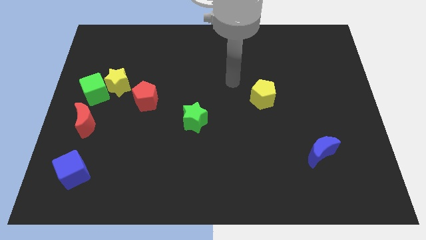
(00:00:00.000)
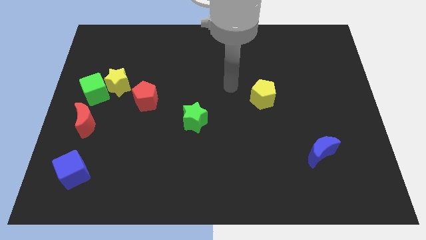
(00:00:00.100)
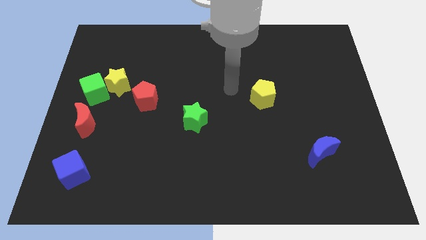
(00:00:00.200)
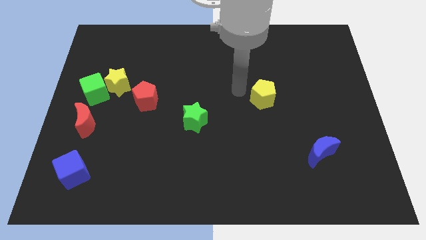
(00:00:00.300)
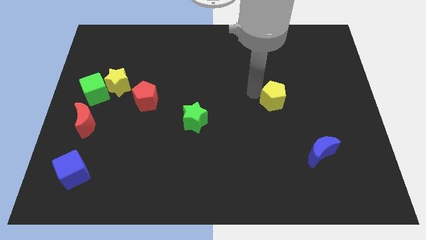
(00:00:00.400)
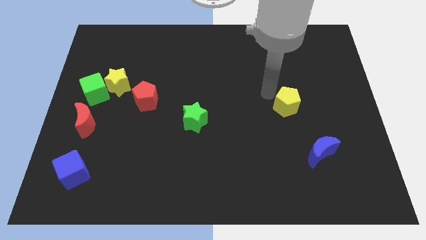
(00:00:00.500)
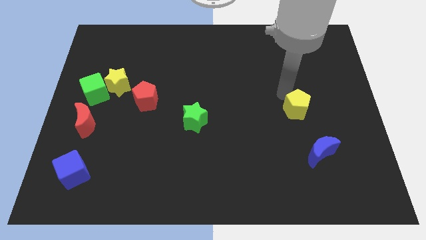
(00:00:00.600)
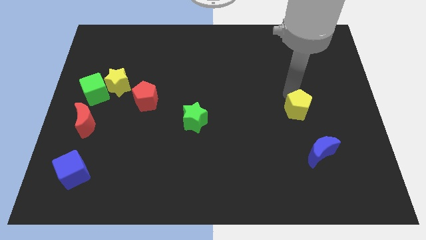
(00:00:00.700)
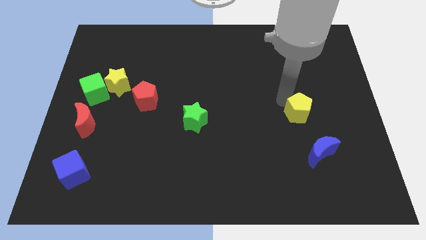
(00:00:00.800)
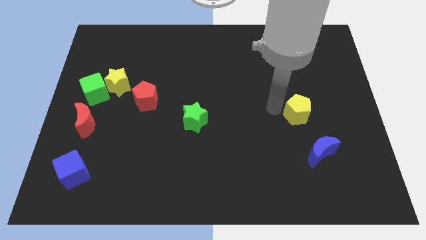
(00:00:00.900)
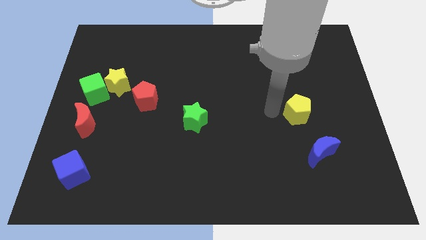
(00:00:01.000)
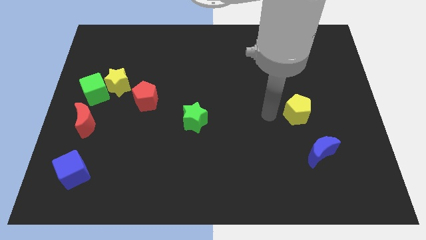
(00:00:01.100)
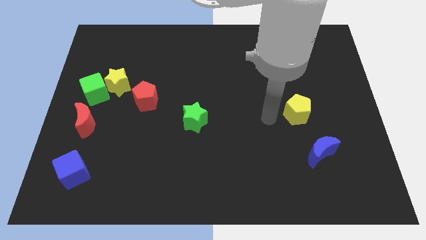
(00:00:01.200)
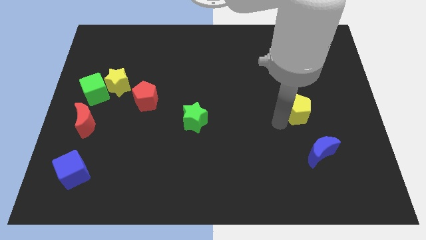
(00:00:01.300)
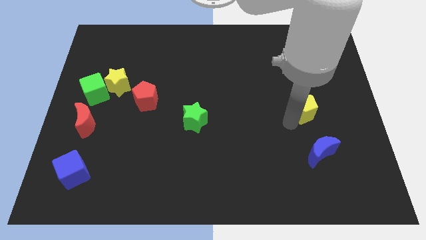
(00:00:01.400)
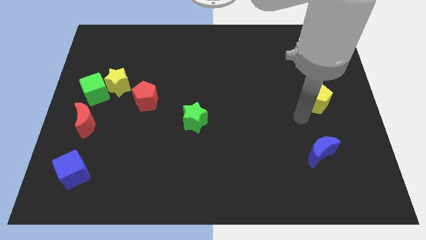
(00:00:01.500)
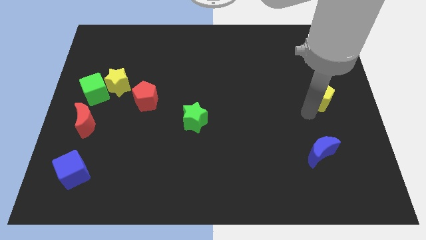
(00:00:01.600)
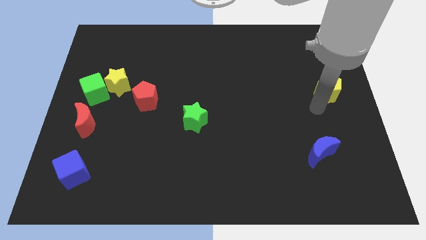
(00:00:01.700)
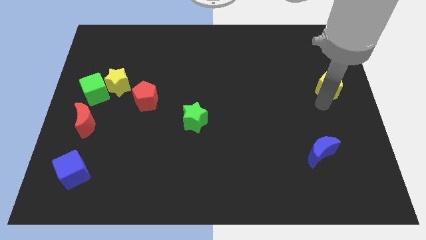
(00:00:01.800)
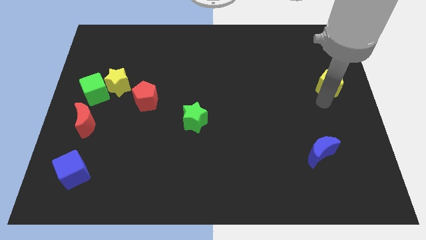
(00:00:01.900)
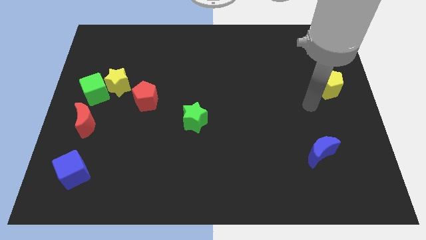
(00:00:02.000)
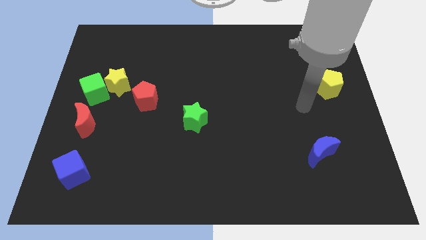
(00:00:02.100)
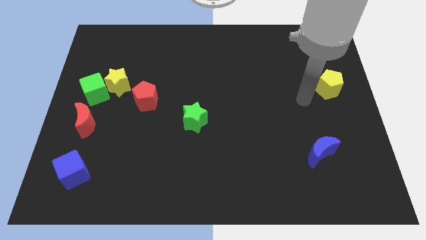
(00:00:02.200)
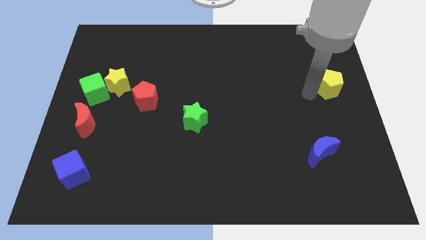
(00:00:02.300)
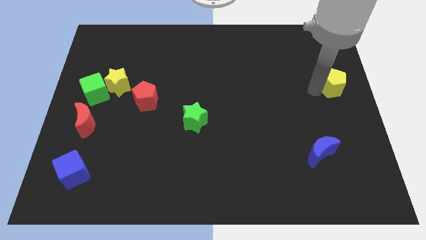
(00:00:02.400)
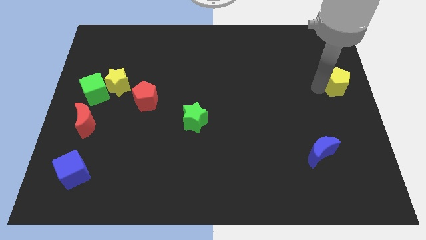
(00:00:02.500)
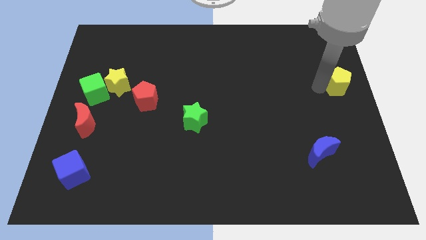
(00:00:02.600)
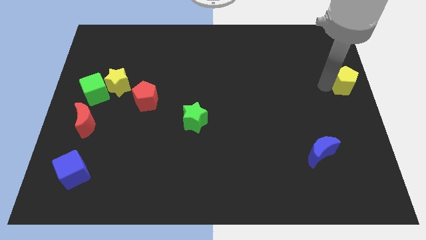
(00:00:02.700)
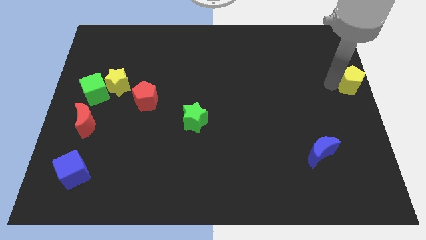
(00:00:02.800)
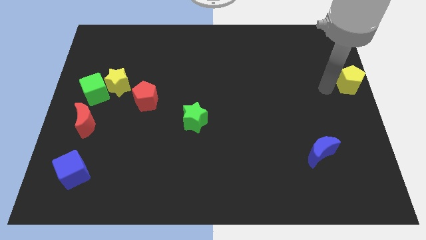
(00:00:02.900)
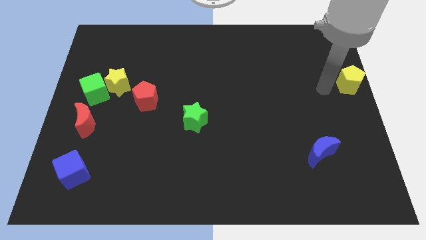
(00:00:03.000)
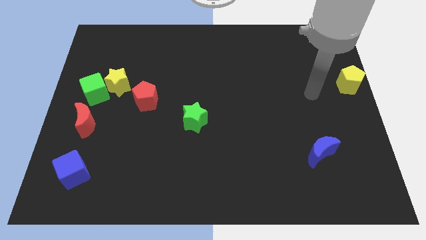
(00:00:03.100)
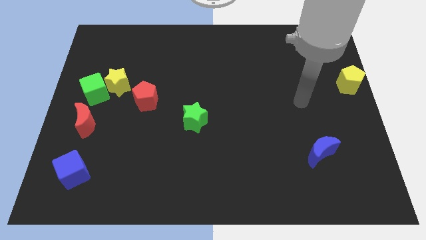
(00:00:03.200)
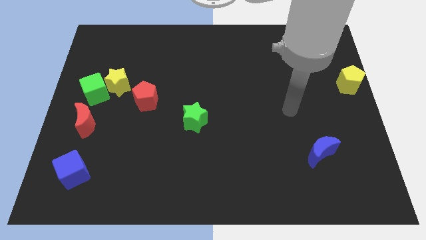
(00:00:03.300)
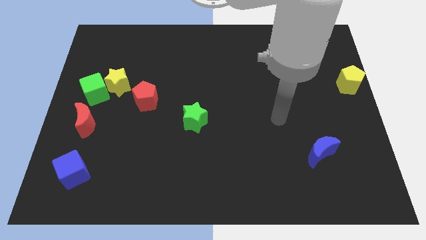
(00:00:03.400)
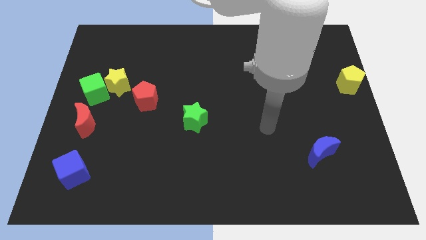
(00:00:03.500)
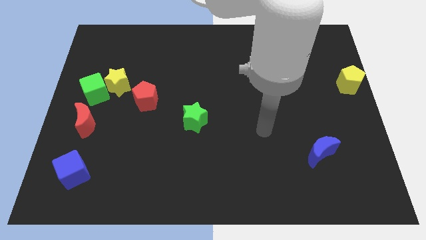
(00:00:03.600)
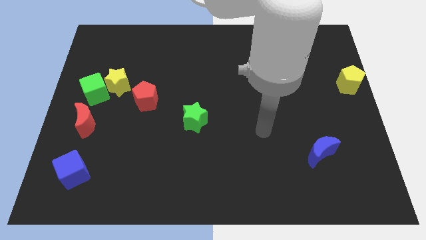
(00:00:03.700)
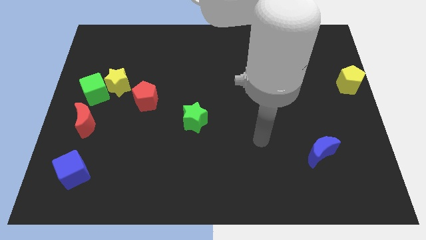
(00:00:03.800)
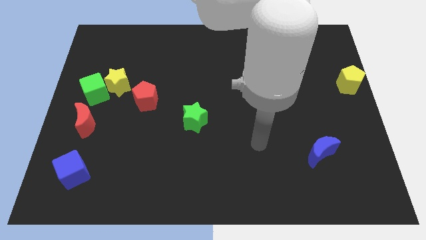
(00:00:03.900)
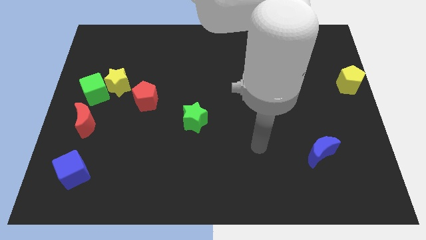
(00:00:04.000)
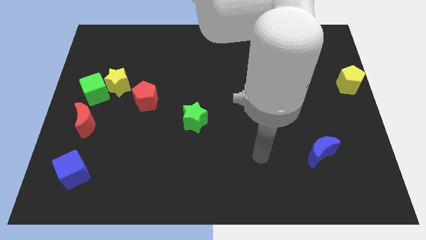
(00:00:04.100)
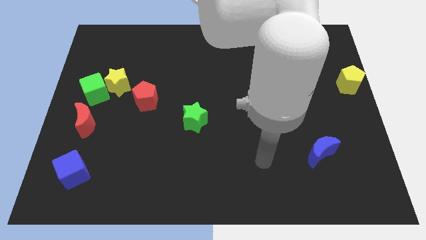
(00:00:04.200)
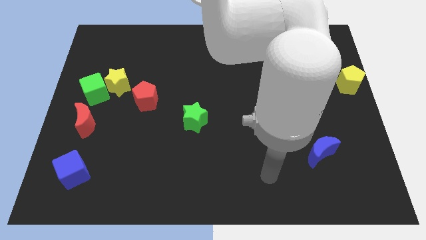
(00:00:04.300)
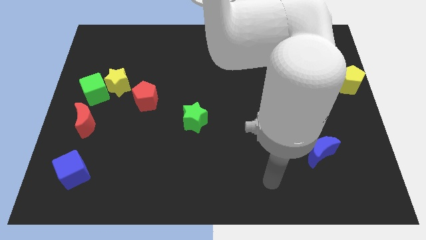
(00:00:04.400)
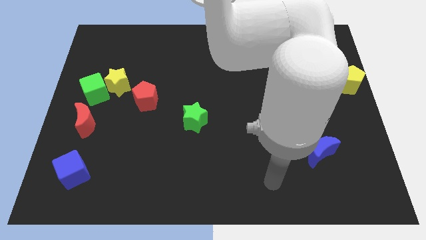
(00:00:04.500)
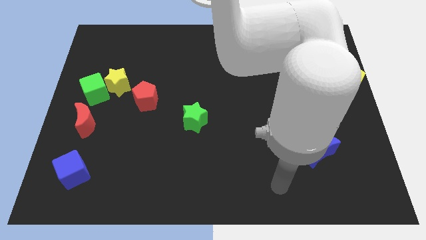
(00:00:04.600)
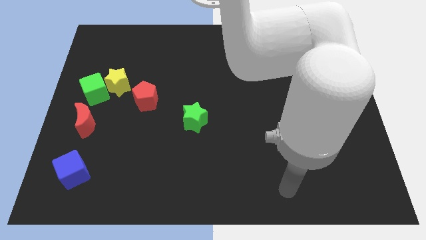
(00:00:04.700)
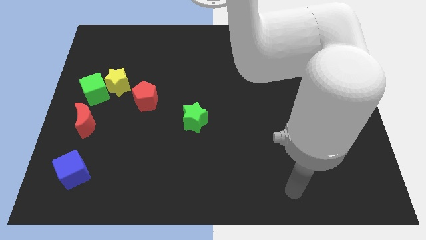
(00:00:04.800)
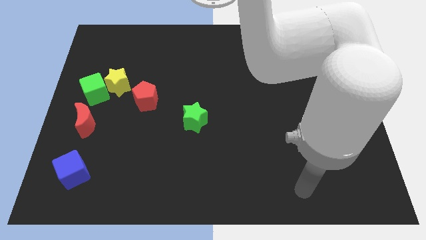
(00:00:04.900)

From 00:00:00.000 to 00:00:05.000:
move yellow pentagon to the left of the board

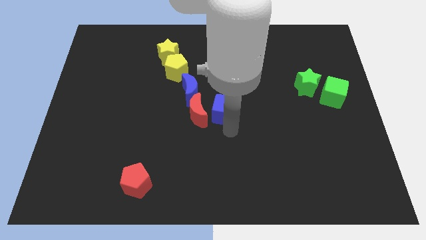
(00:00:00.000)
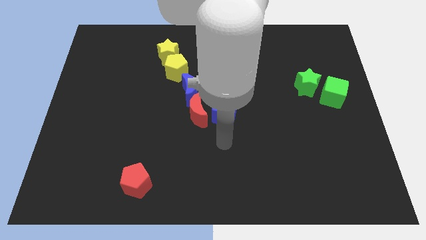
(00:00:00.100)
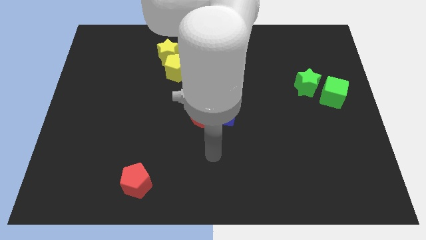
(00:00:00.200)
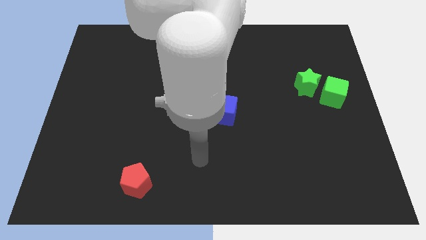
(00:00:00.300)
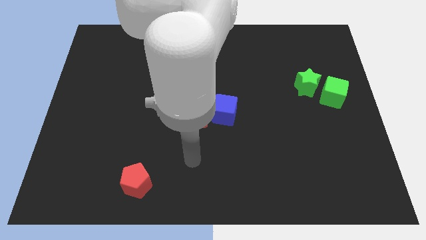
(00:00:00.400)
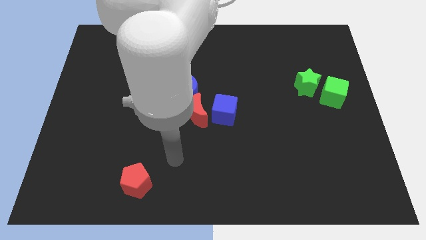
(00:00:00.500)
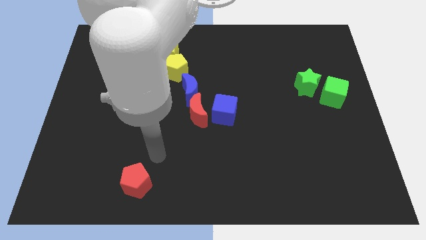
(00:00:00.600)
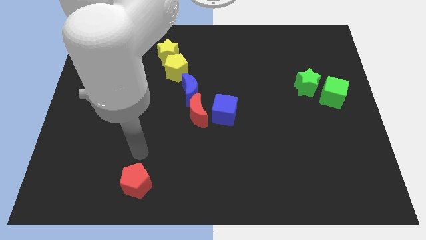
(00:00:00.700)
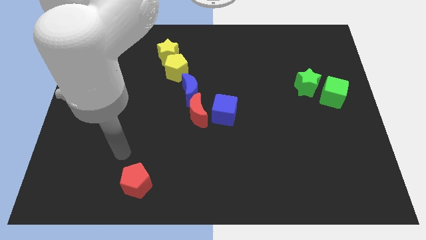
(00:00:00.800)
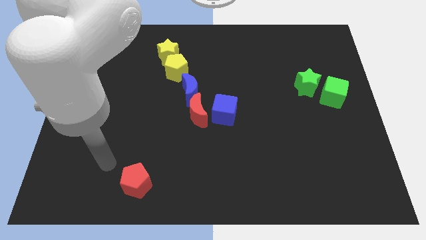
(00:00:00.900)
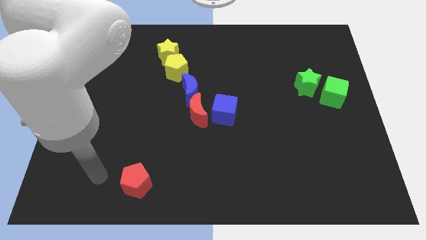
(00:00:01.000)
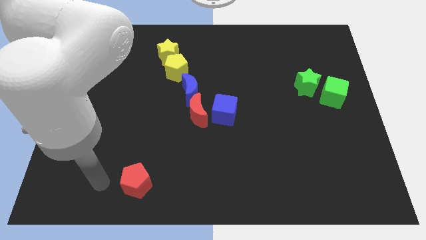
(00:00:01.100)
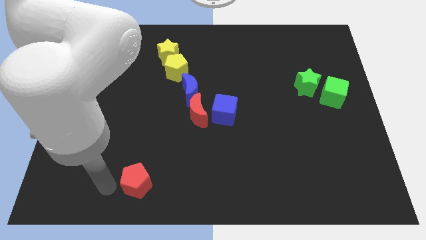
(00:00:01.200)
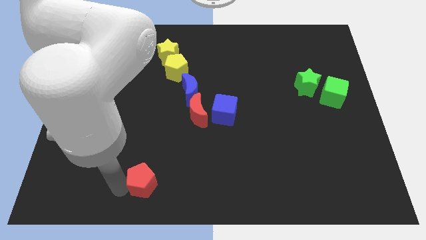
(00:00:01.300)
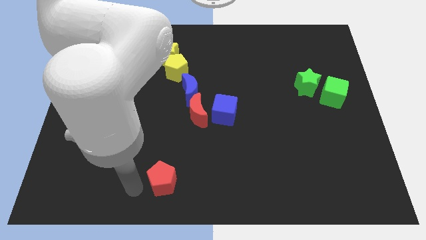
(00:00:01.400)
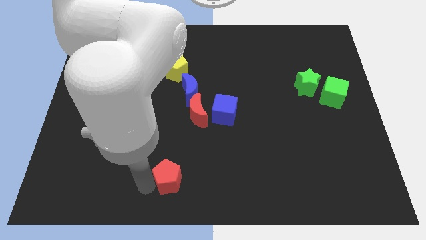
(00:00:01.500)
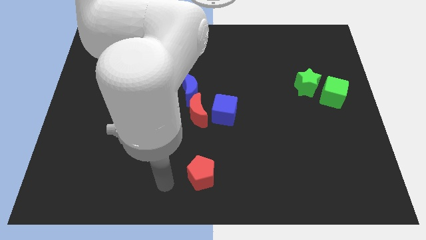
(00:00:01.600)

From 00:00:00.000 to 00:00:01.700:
push the red pentagon to the bottom side of the red crescent

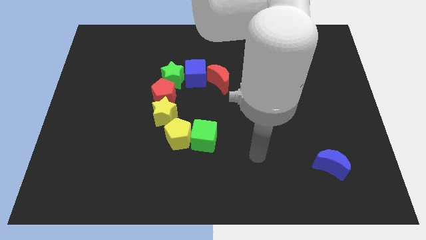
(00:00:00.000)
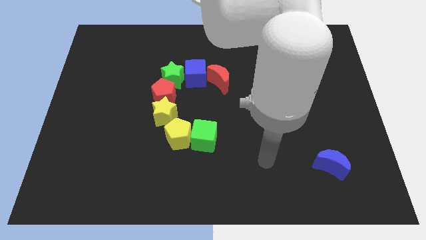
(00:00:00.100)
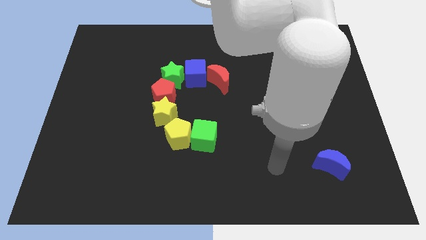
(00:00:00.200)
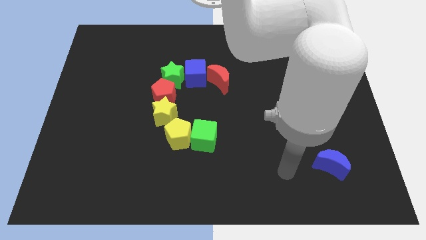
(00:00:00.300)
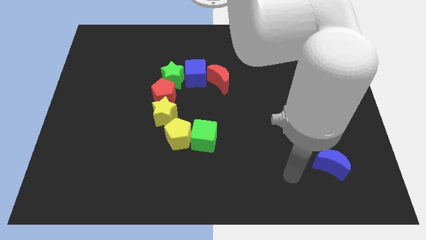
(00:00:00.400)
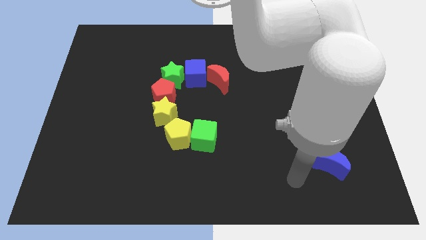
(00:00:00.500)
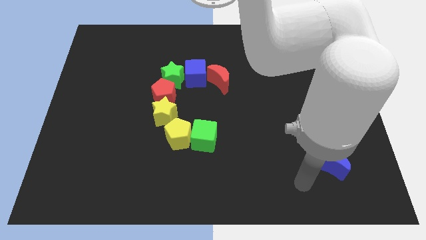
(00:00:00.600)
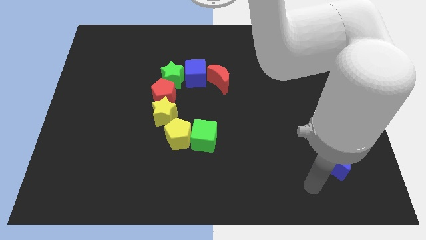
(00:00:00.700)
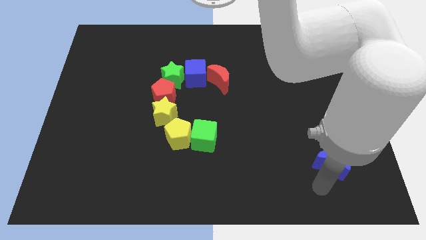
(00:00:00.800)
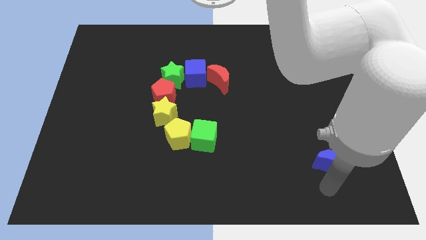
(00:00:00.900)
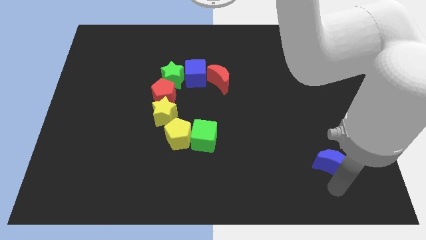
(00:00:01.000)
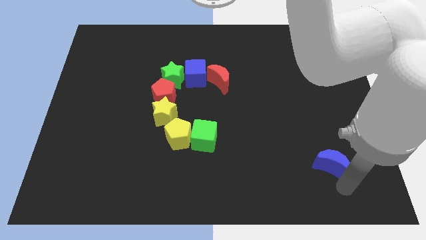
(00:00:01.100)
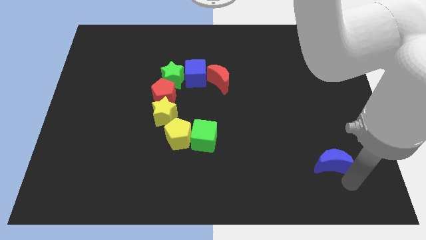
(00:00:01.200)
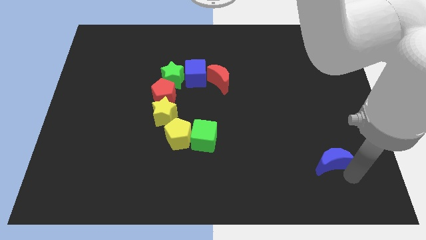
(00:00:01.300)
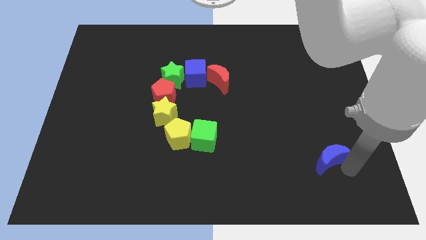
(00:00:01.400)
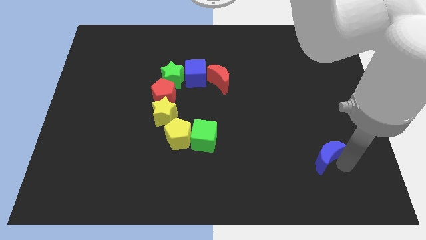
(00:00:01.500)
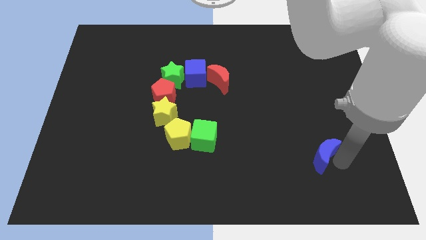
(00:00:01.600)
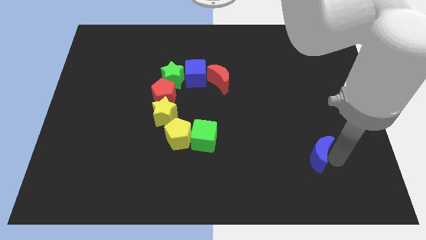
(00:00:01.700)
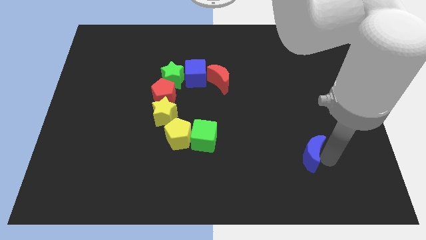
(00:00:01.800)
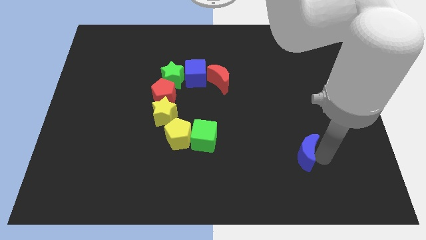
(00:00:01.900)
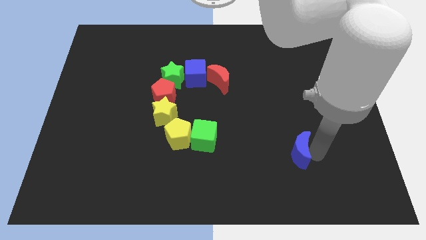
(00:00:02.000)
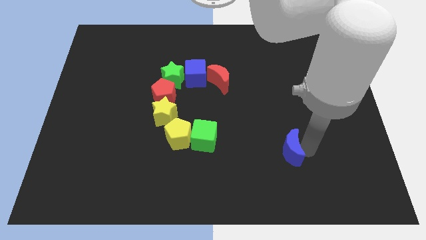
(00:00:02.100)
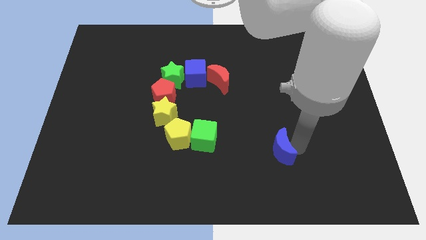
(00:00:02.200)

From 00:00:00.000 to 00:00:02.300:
slightly push the blue moon towards the green cube
